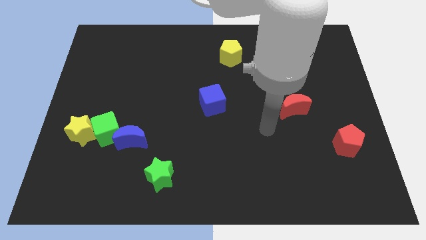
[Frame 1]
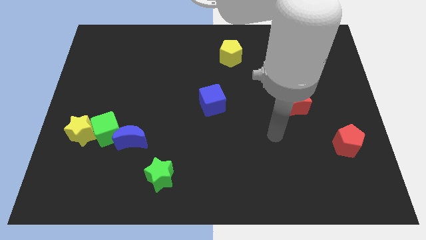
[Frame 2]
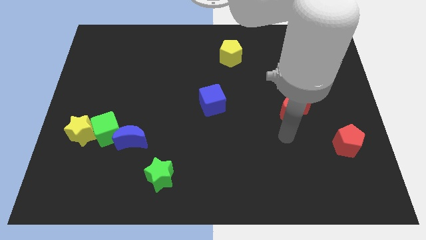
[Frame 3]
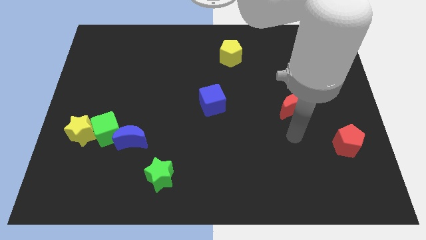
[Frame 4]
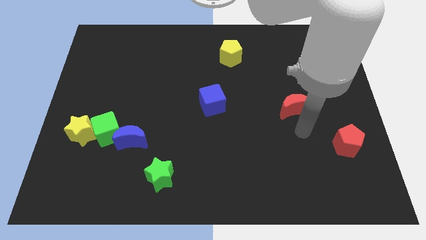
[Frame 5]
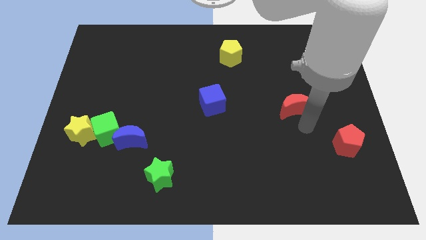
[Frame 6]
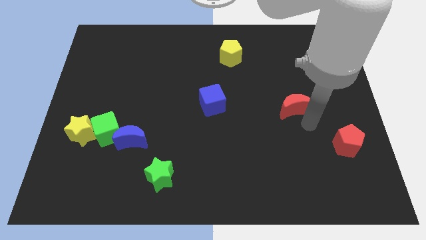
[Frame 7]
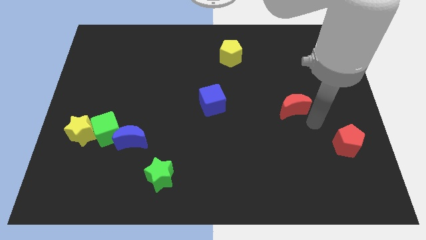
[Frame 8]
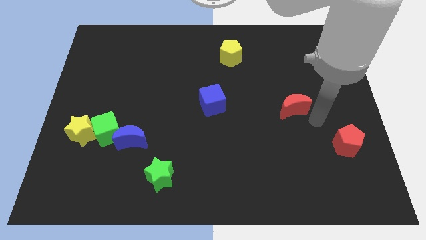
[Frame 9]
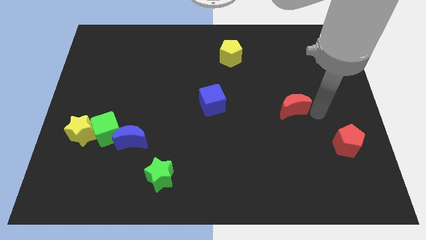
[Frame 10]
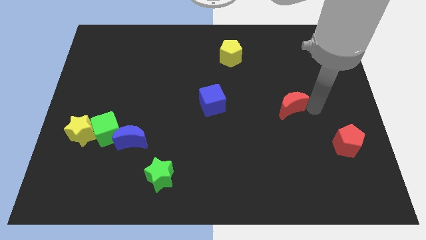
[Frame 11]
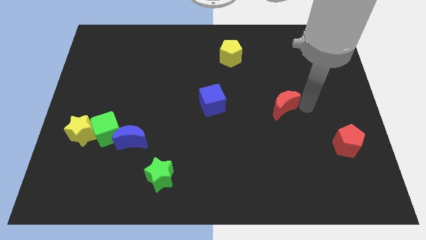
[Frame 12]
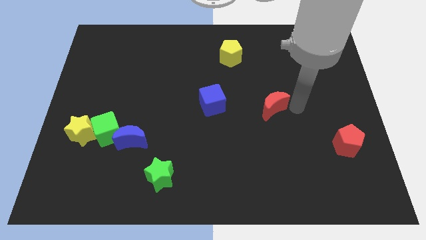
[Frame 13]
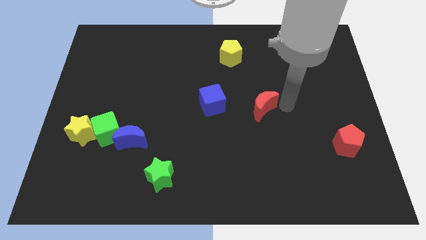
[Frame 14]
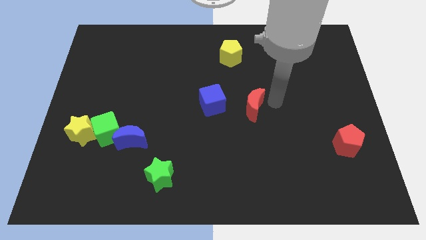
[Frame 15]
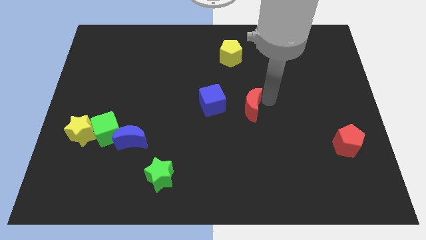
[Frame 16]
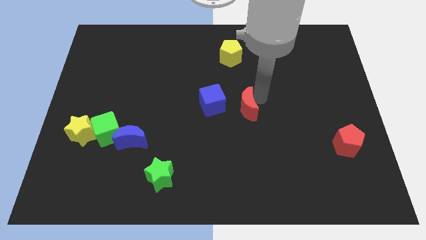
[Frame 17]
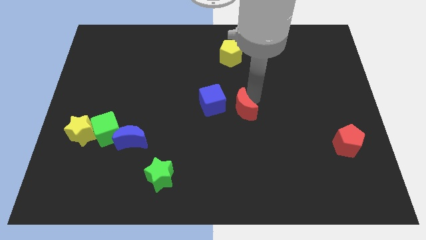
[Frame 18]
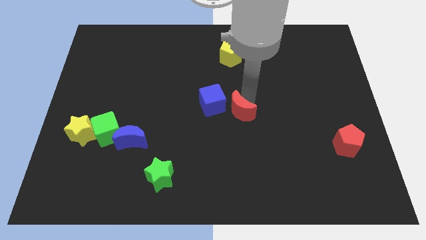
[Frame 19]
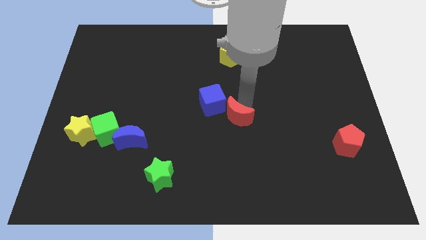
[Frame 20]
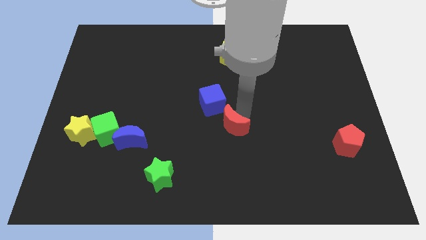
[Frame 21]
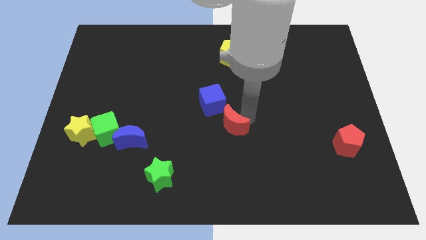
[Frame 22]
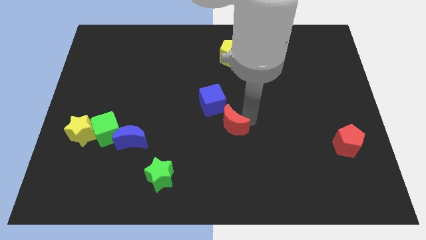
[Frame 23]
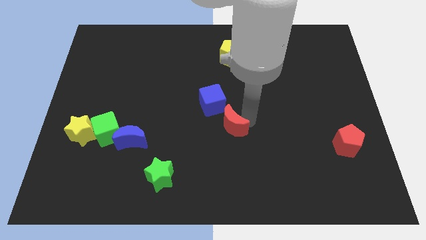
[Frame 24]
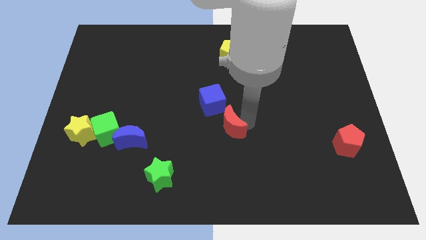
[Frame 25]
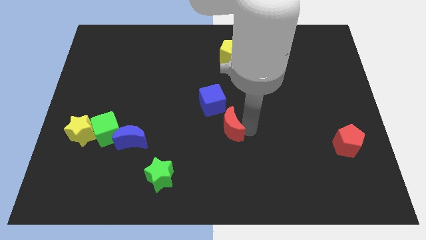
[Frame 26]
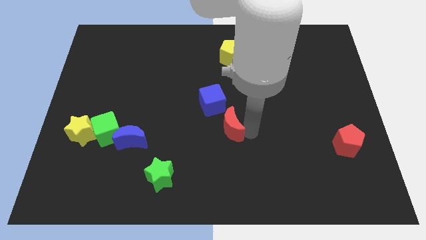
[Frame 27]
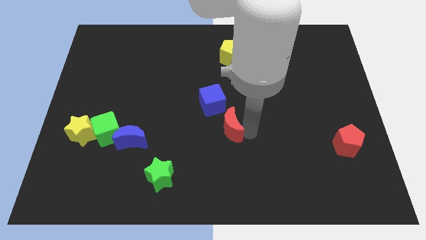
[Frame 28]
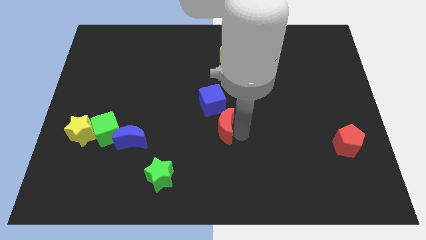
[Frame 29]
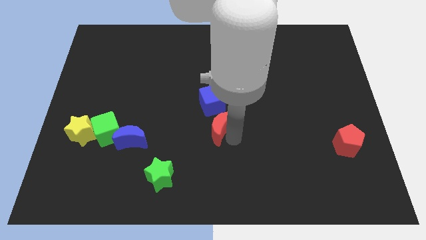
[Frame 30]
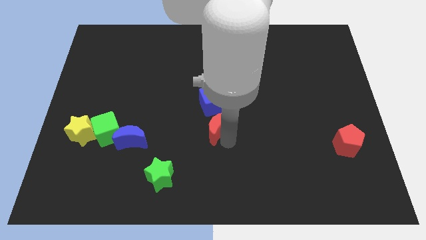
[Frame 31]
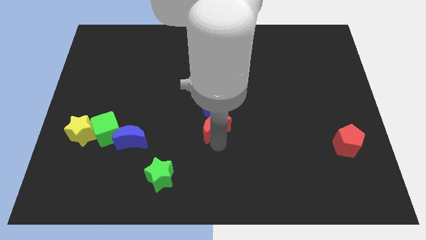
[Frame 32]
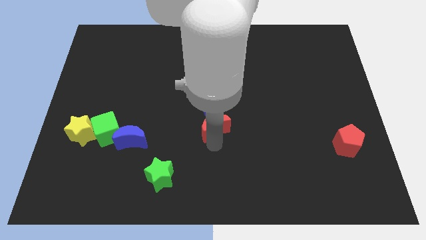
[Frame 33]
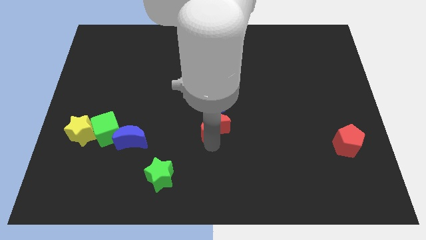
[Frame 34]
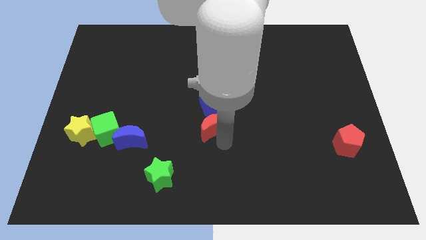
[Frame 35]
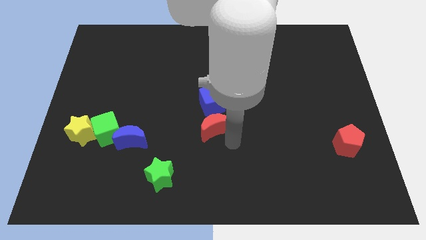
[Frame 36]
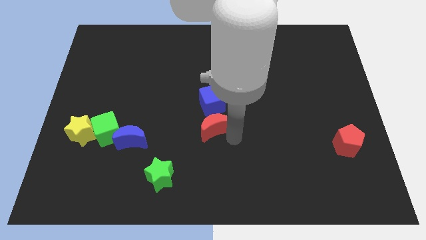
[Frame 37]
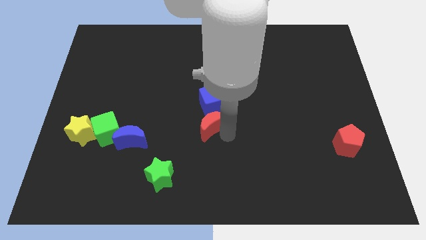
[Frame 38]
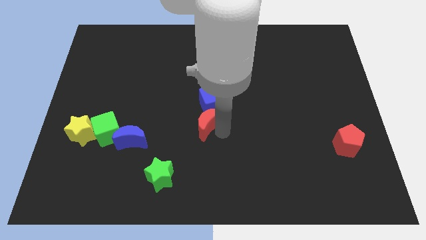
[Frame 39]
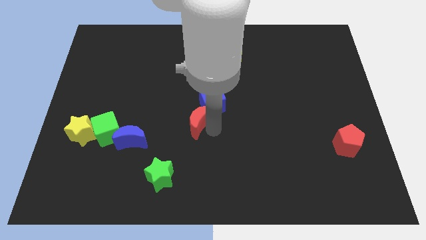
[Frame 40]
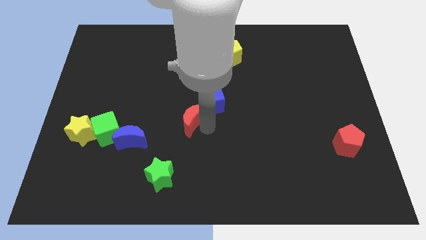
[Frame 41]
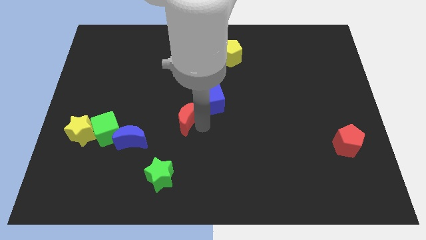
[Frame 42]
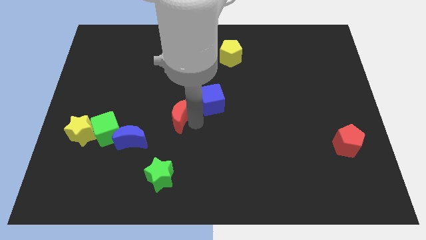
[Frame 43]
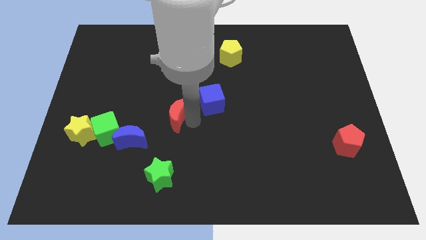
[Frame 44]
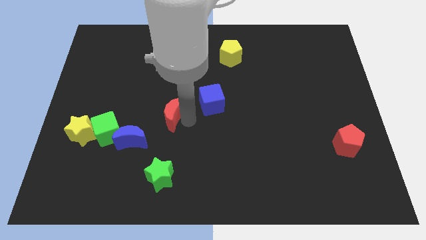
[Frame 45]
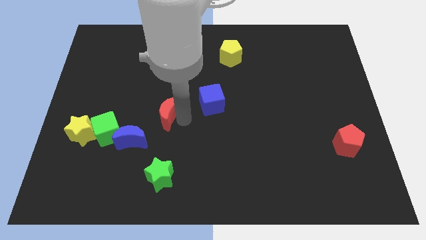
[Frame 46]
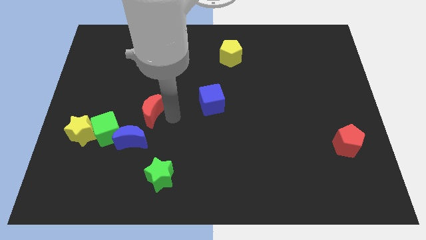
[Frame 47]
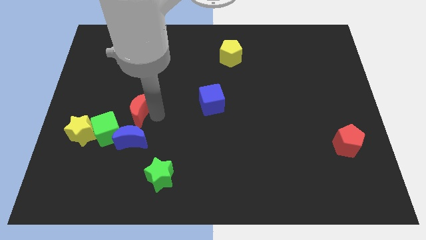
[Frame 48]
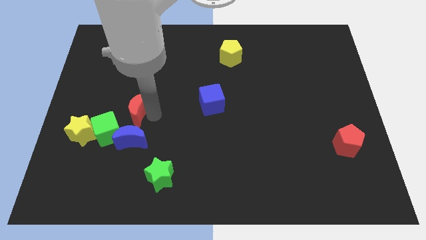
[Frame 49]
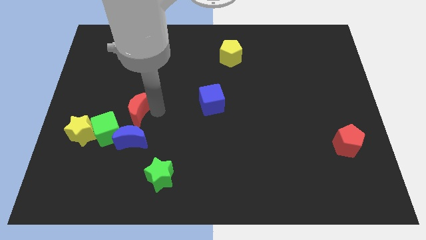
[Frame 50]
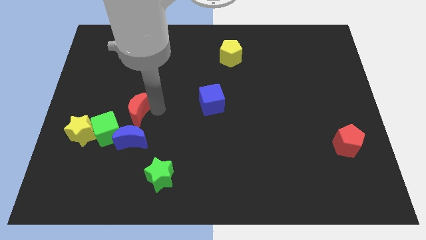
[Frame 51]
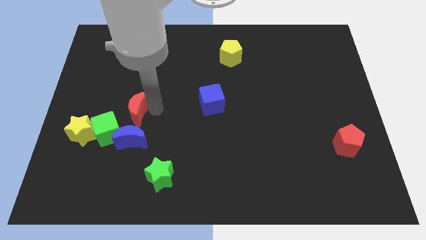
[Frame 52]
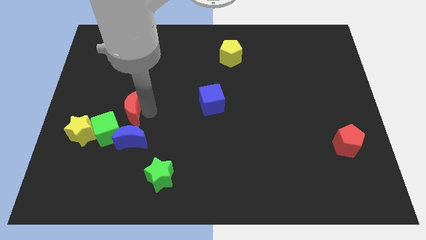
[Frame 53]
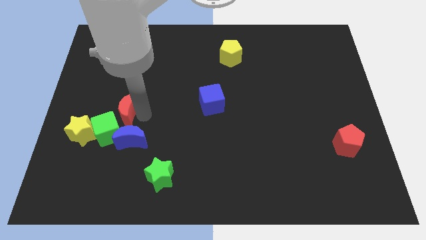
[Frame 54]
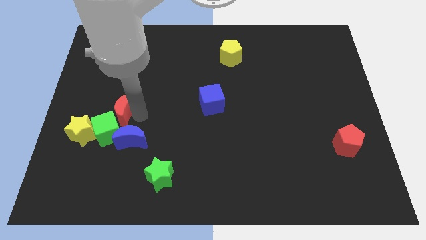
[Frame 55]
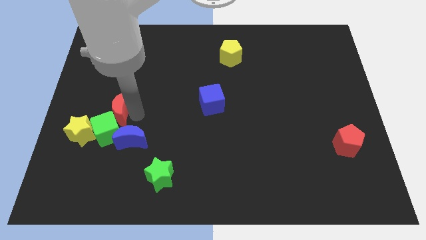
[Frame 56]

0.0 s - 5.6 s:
slide the red moon next to the green cube

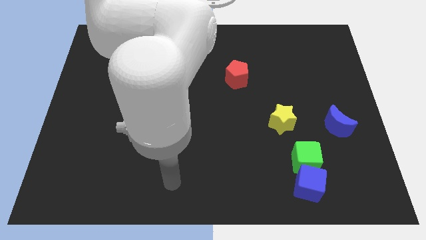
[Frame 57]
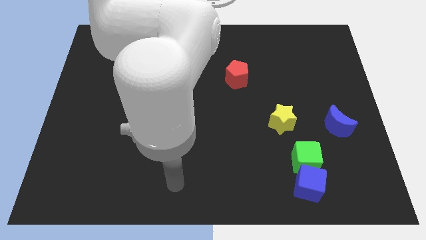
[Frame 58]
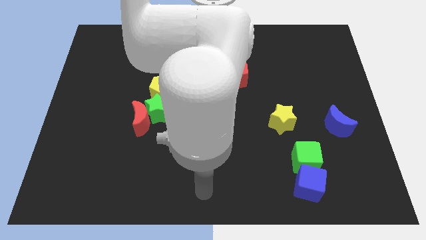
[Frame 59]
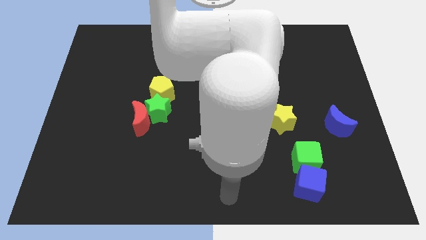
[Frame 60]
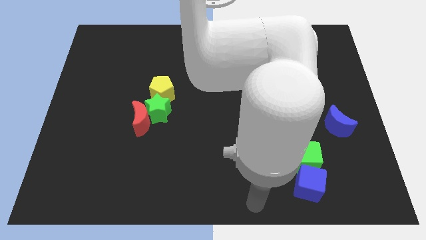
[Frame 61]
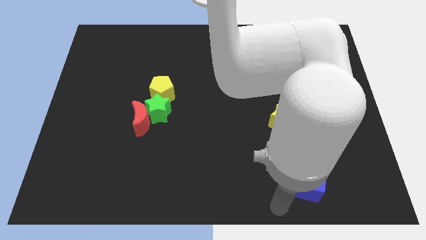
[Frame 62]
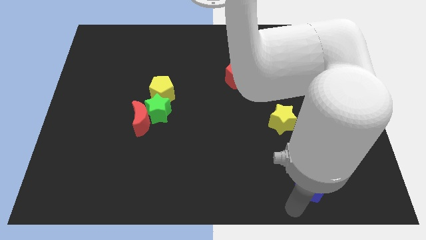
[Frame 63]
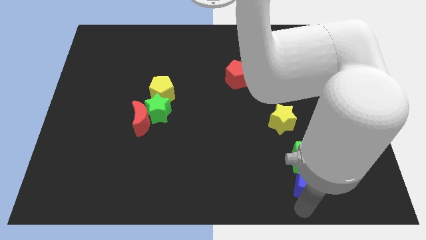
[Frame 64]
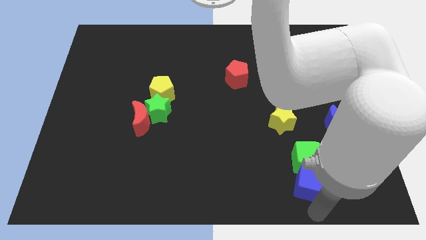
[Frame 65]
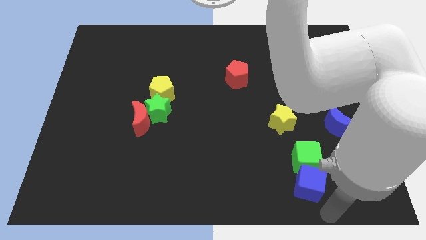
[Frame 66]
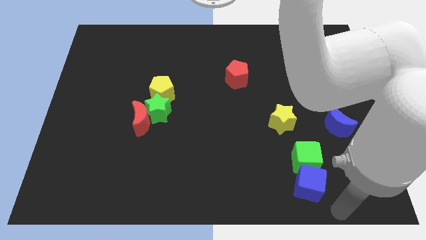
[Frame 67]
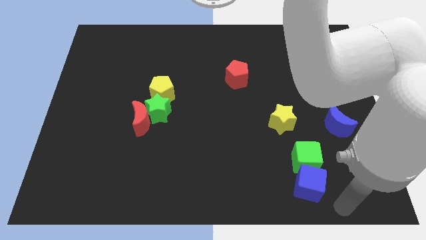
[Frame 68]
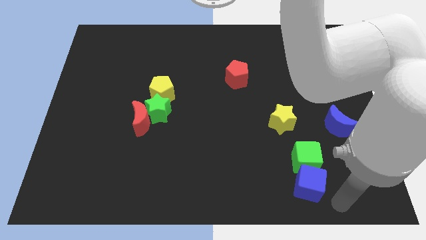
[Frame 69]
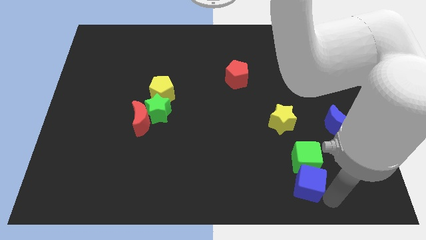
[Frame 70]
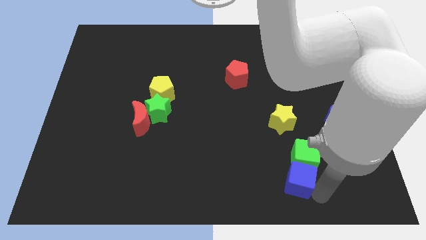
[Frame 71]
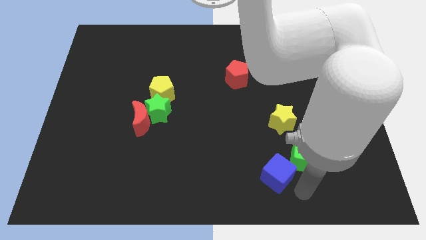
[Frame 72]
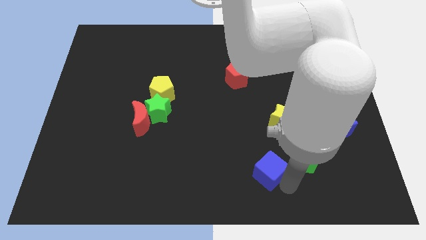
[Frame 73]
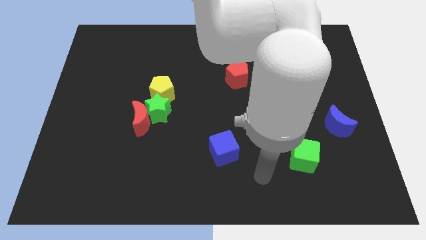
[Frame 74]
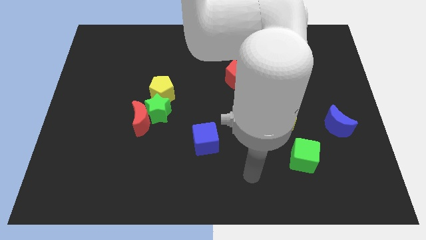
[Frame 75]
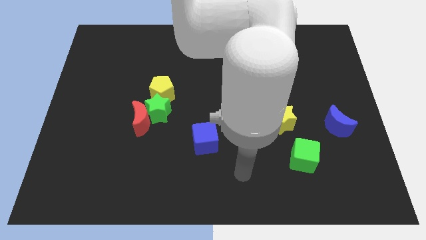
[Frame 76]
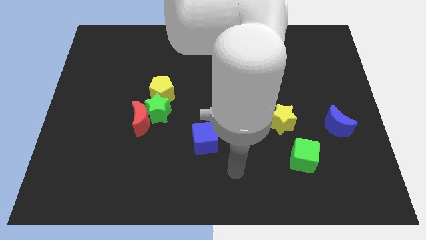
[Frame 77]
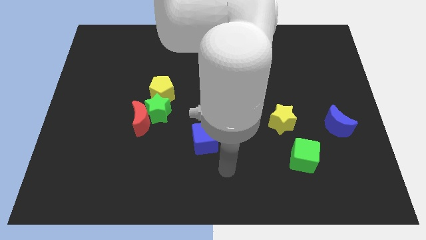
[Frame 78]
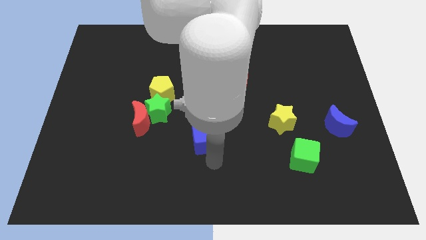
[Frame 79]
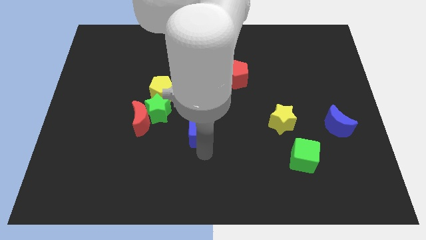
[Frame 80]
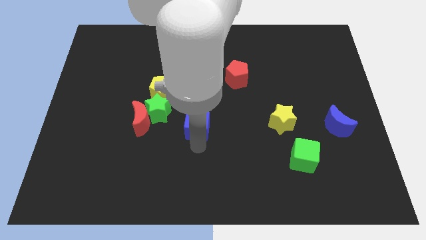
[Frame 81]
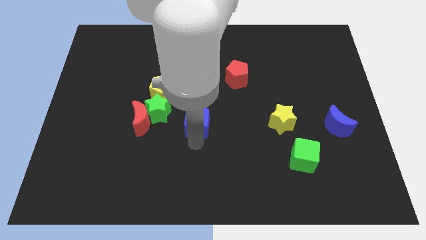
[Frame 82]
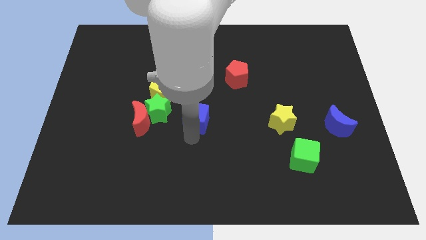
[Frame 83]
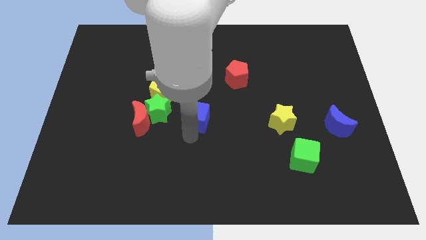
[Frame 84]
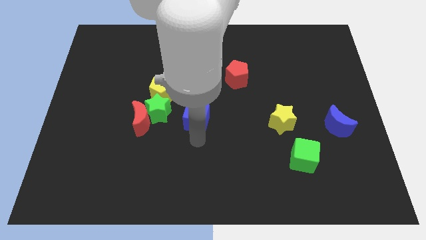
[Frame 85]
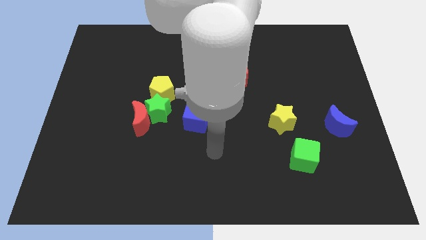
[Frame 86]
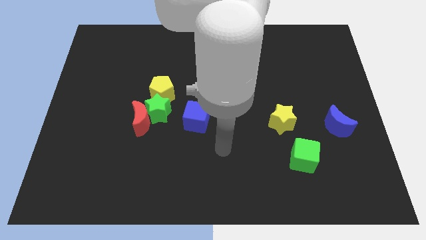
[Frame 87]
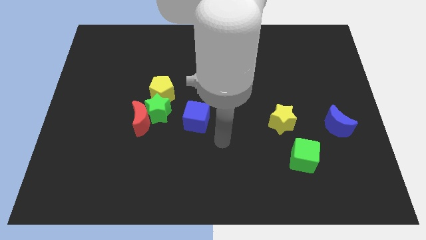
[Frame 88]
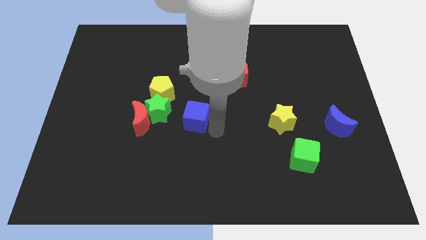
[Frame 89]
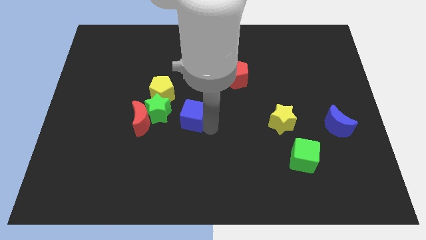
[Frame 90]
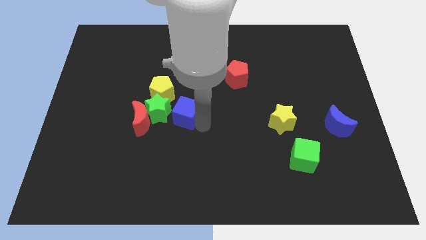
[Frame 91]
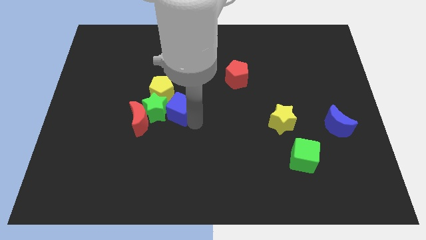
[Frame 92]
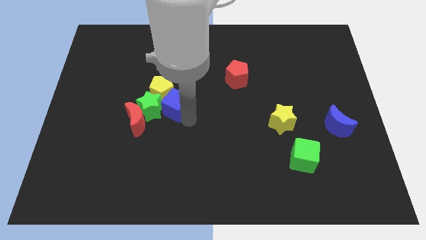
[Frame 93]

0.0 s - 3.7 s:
slide the blue cube towards the green star
